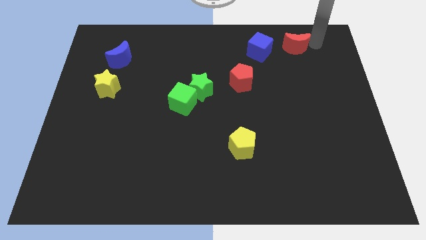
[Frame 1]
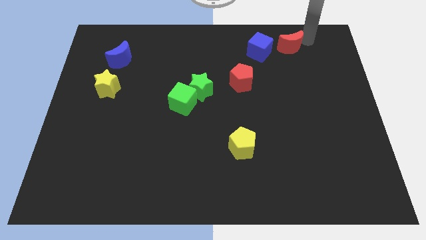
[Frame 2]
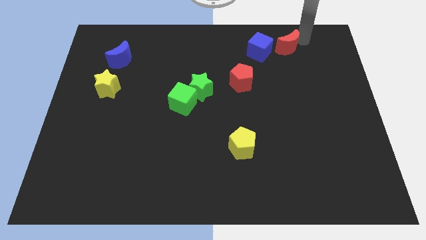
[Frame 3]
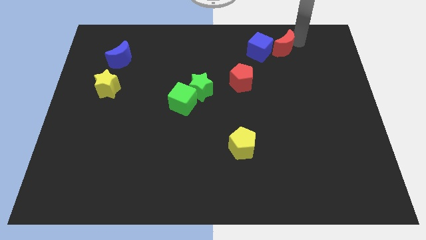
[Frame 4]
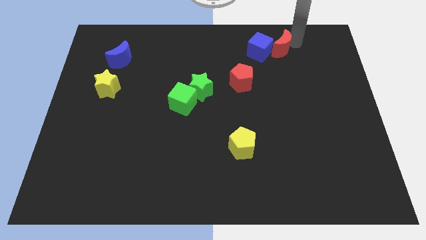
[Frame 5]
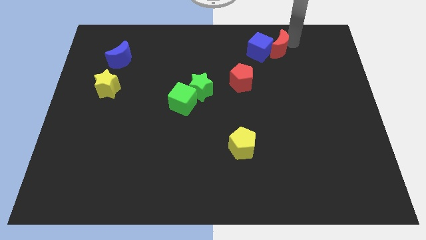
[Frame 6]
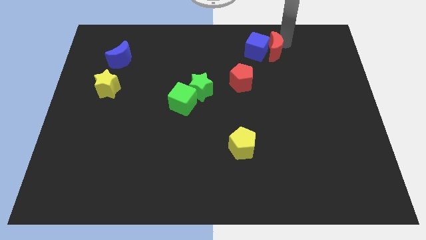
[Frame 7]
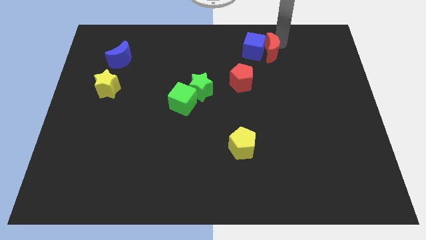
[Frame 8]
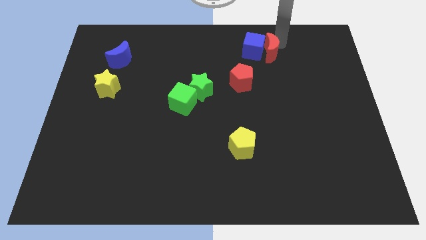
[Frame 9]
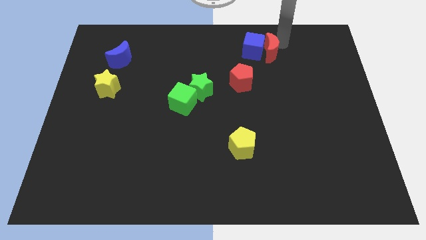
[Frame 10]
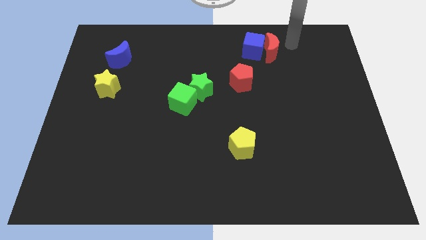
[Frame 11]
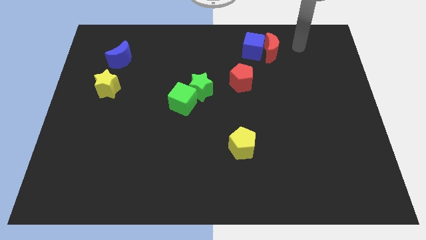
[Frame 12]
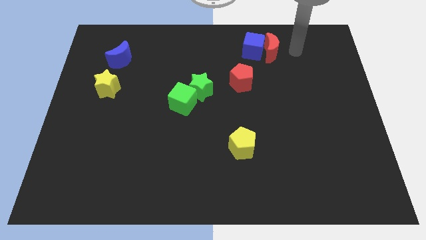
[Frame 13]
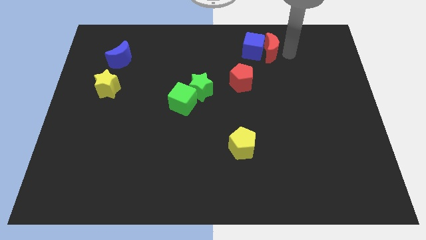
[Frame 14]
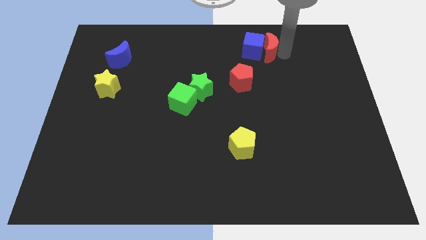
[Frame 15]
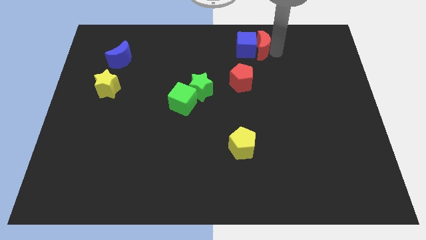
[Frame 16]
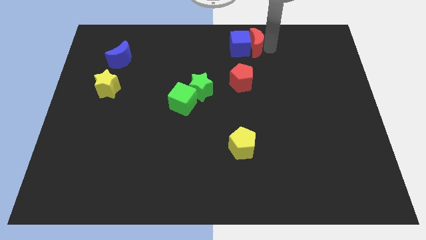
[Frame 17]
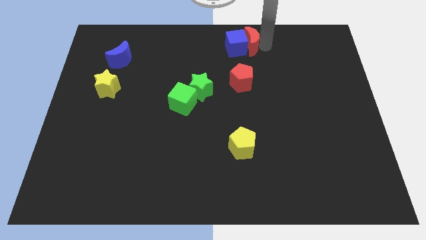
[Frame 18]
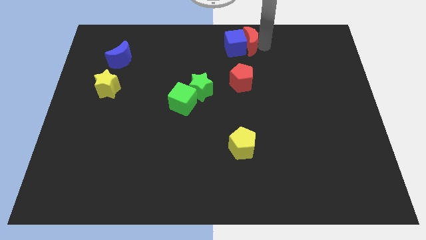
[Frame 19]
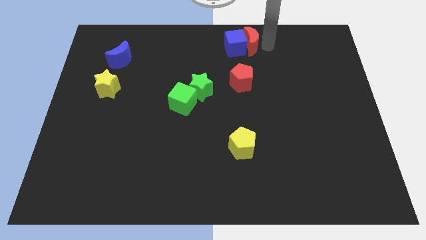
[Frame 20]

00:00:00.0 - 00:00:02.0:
push the red crescent into the blue cube

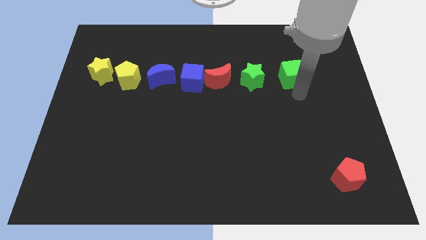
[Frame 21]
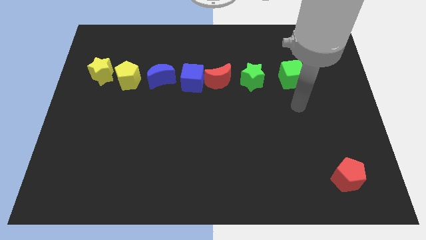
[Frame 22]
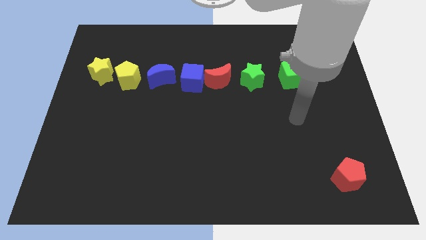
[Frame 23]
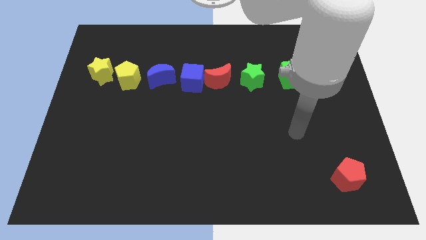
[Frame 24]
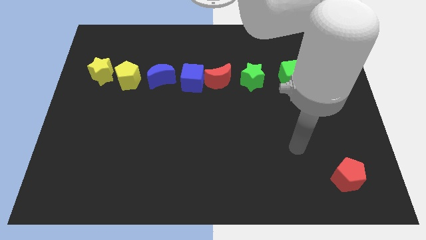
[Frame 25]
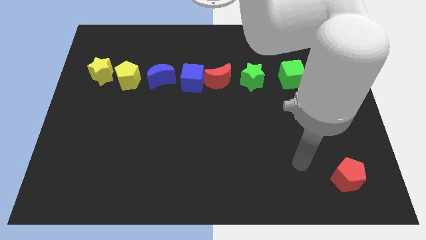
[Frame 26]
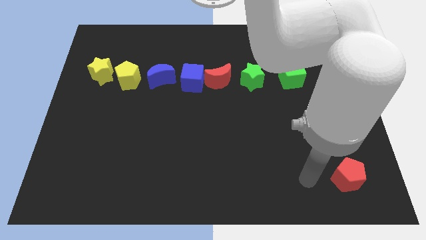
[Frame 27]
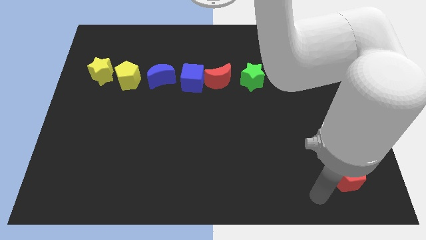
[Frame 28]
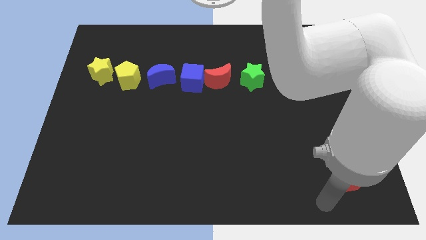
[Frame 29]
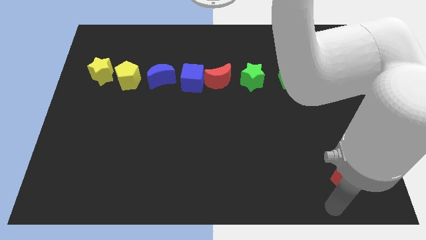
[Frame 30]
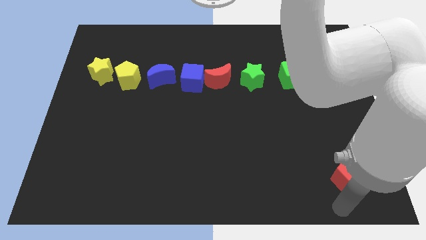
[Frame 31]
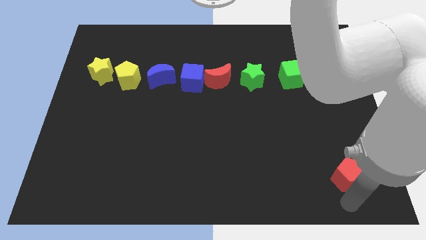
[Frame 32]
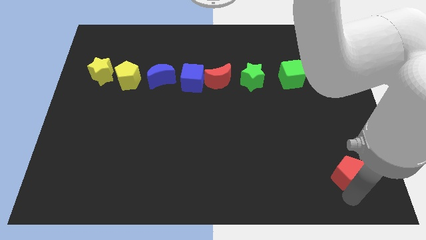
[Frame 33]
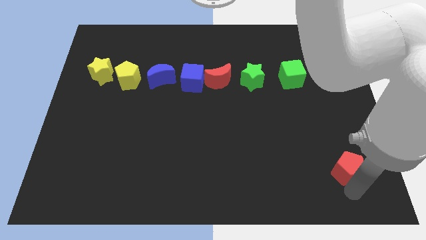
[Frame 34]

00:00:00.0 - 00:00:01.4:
move your arm to the red pentagon

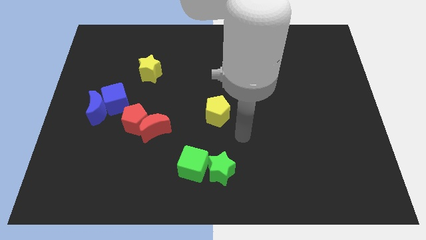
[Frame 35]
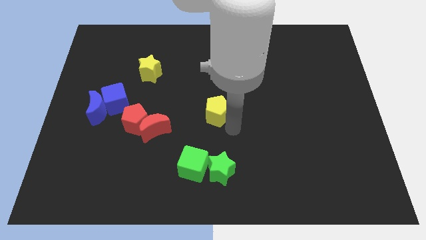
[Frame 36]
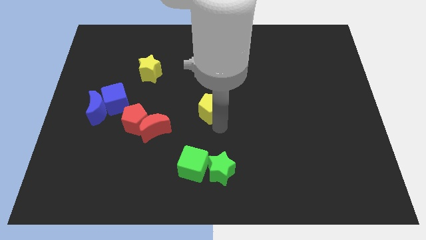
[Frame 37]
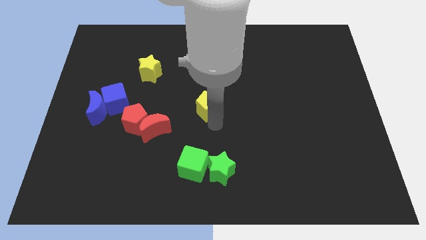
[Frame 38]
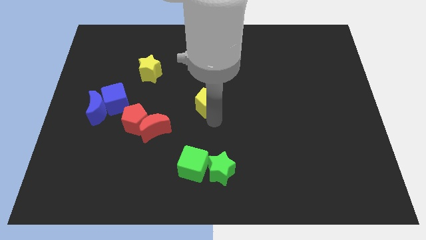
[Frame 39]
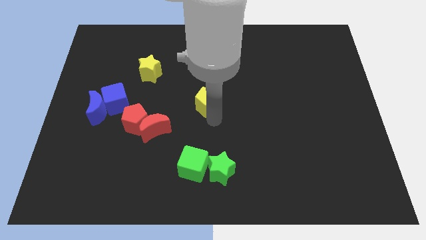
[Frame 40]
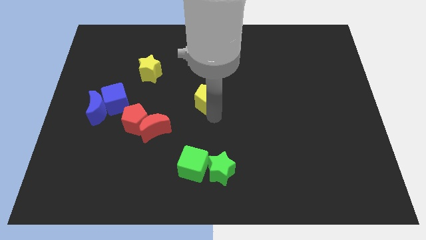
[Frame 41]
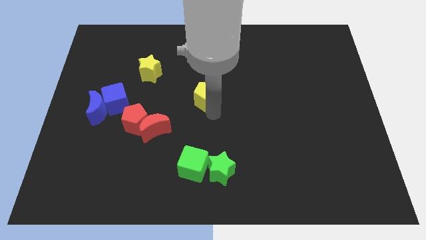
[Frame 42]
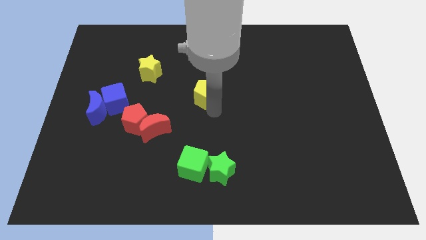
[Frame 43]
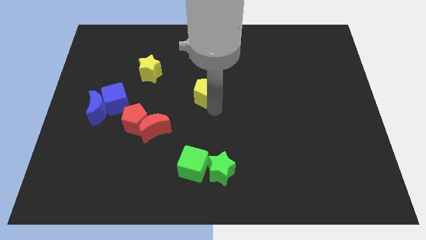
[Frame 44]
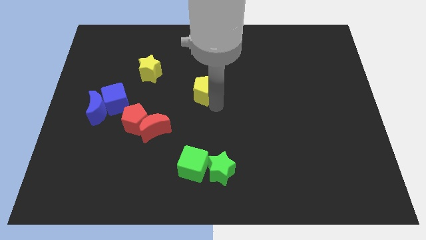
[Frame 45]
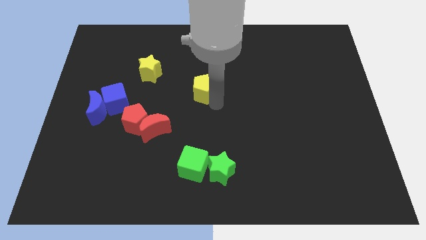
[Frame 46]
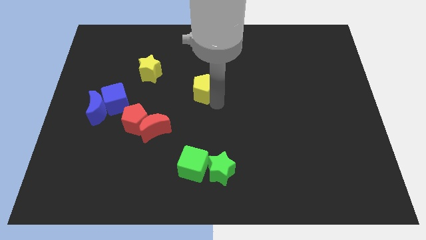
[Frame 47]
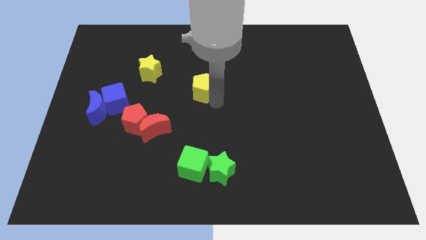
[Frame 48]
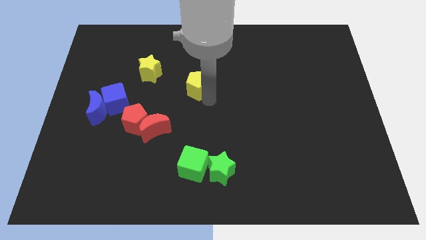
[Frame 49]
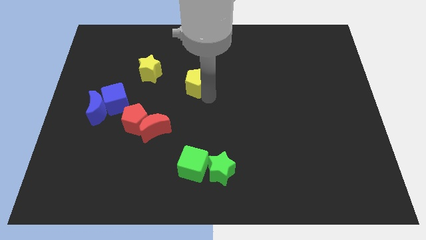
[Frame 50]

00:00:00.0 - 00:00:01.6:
slide the yellow pentagon diagonally top right to the red pentagon

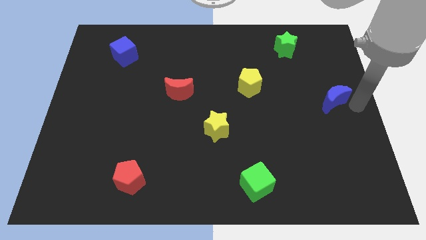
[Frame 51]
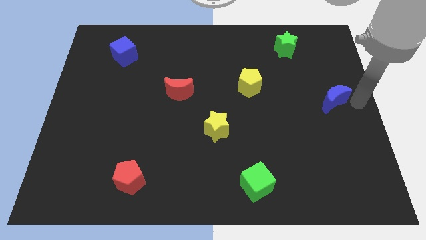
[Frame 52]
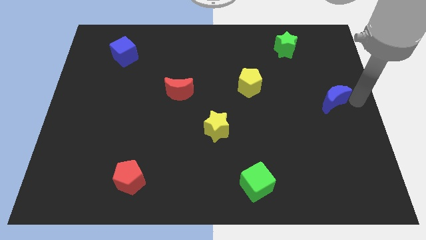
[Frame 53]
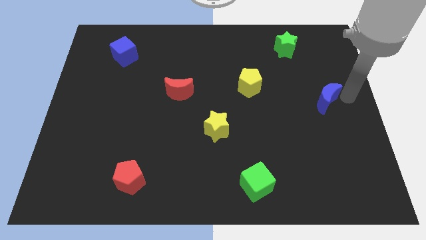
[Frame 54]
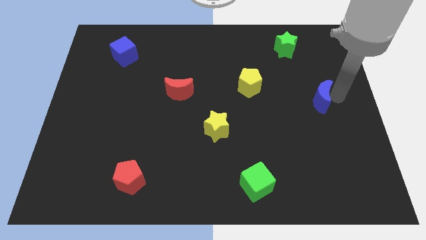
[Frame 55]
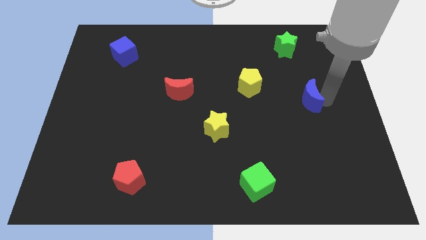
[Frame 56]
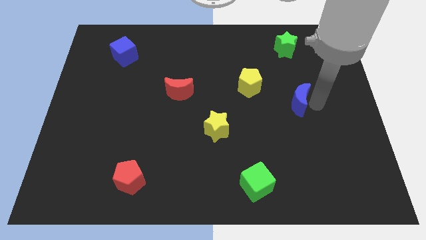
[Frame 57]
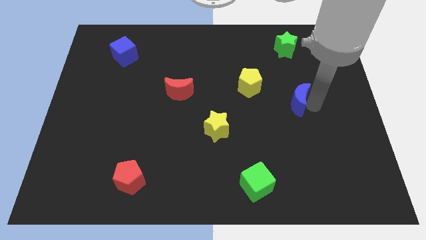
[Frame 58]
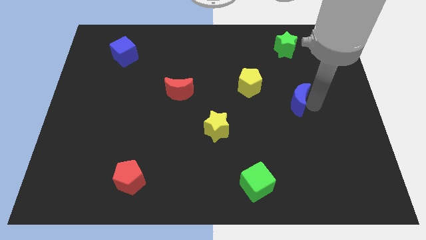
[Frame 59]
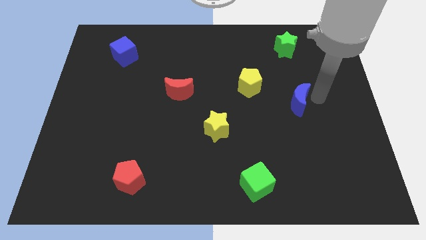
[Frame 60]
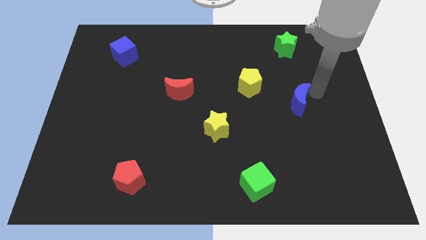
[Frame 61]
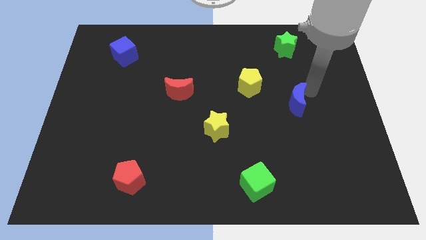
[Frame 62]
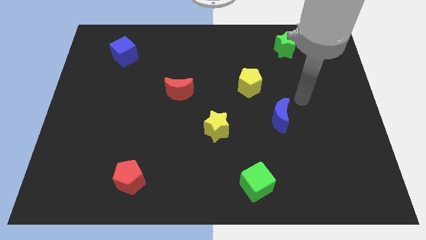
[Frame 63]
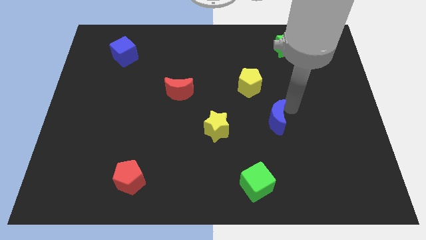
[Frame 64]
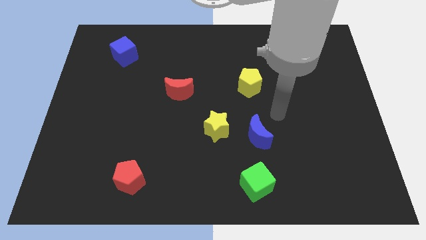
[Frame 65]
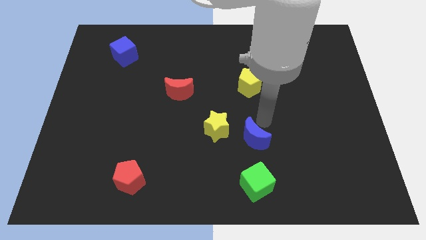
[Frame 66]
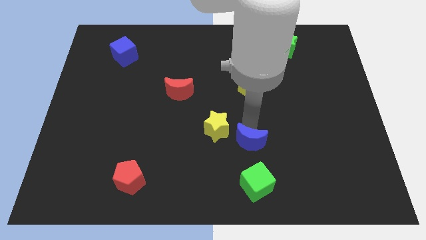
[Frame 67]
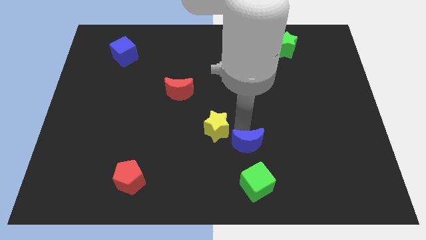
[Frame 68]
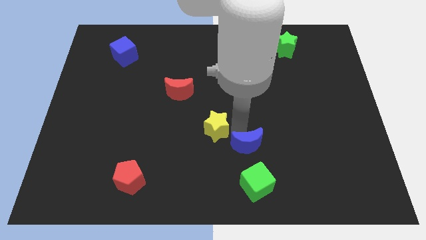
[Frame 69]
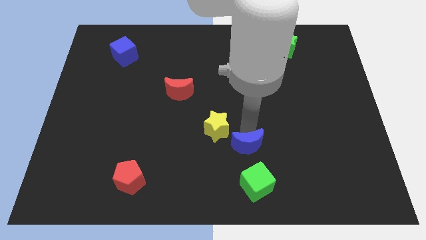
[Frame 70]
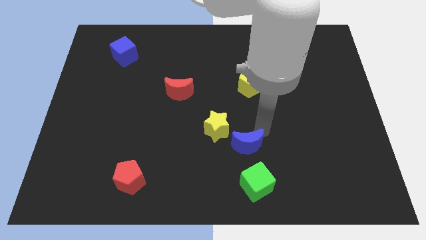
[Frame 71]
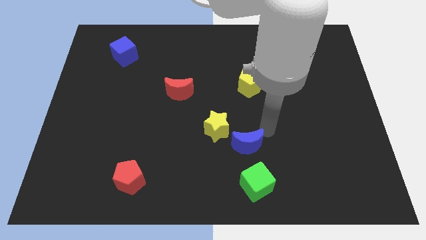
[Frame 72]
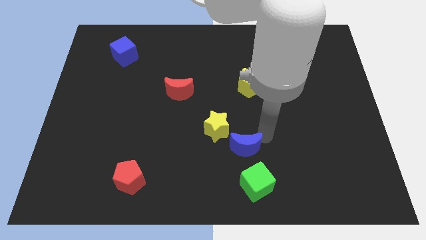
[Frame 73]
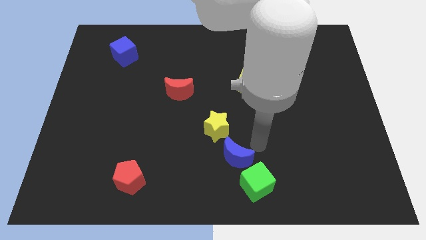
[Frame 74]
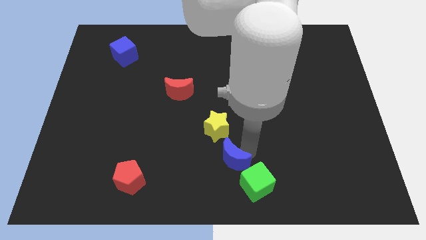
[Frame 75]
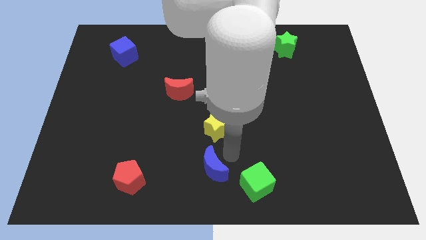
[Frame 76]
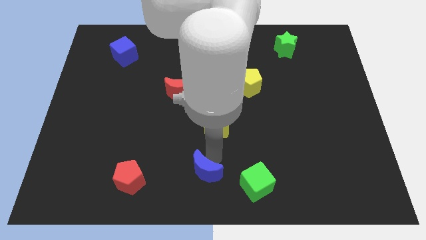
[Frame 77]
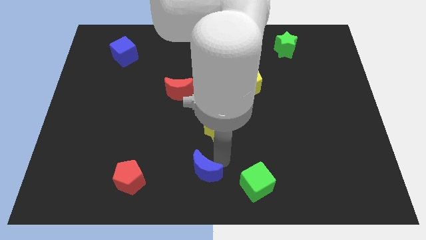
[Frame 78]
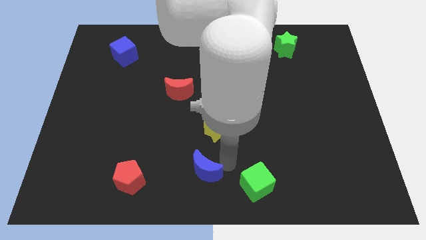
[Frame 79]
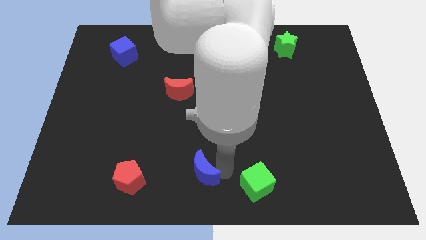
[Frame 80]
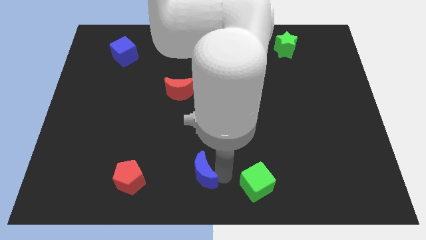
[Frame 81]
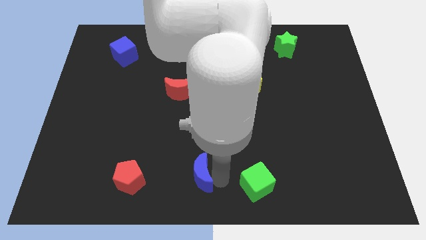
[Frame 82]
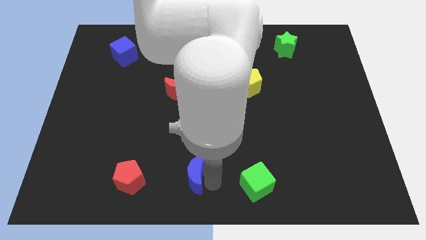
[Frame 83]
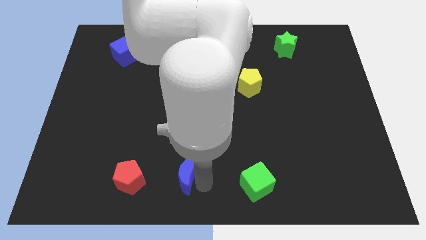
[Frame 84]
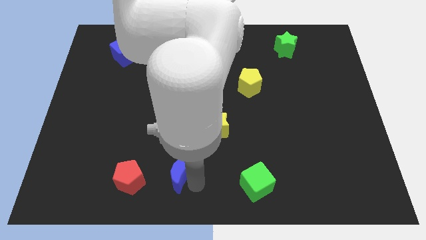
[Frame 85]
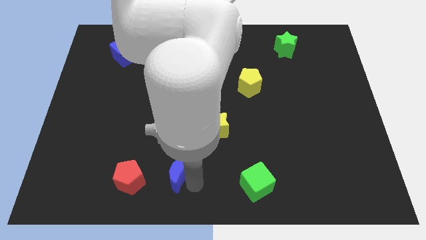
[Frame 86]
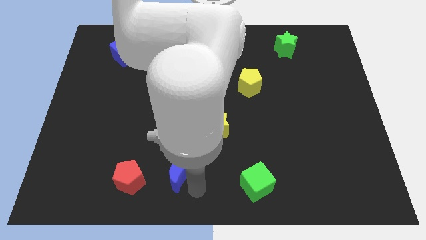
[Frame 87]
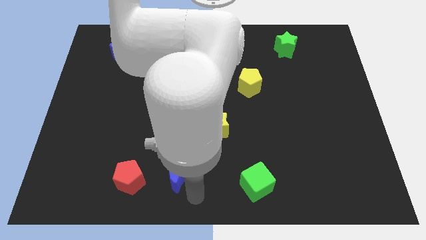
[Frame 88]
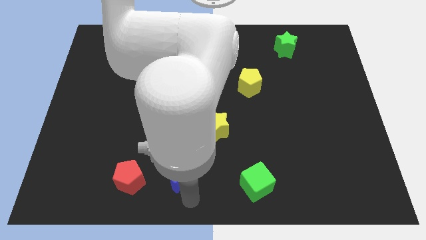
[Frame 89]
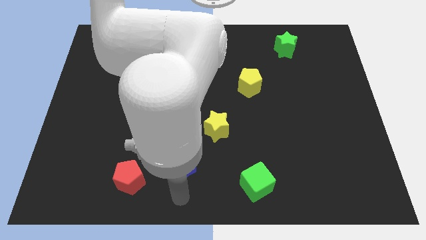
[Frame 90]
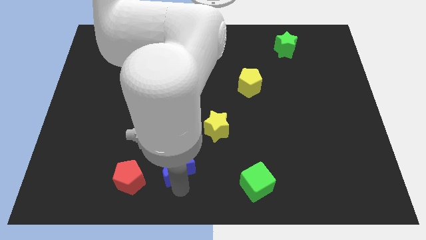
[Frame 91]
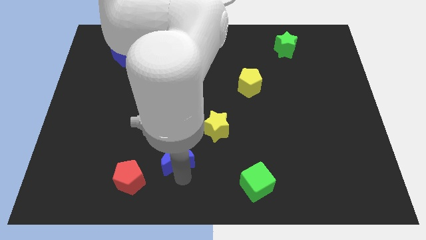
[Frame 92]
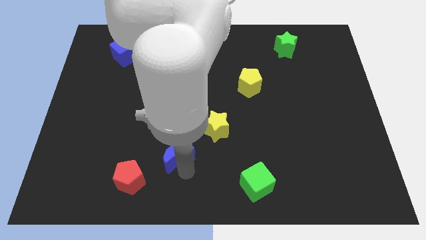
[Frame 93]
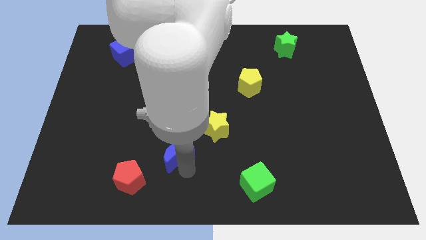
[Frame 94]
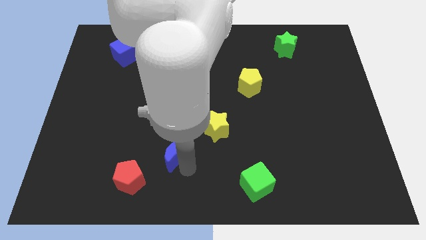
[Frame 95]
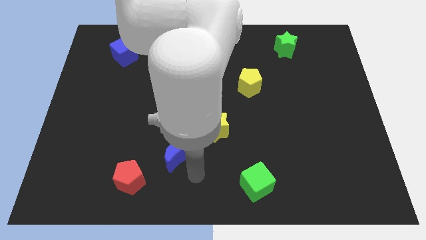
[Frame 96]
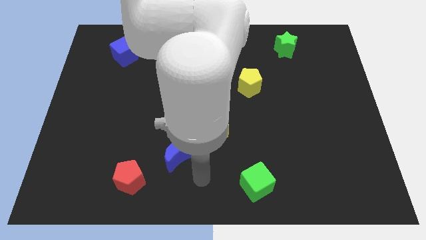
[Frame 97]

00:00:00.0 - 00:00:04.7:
move the blue moon to the bottom left side of the yellow star
